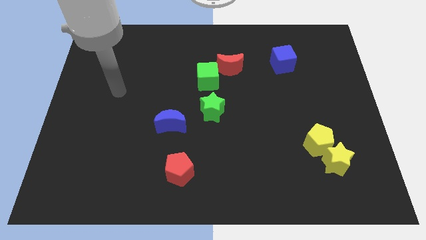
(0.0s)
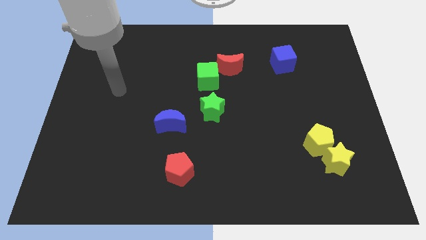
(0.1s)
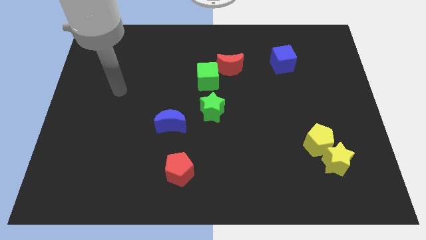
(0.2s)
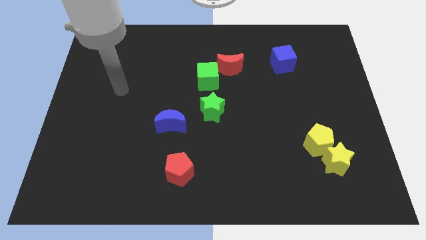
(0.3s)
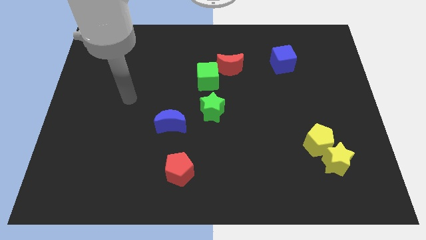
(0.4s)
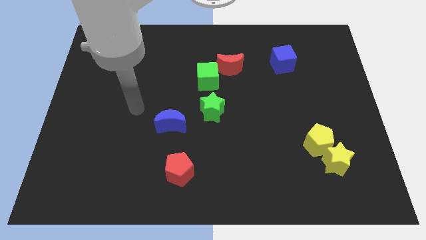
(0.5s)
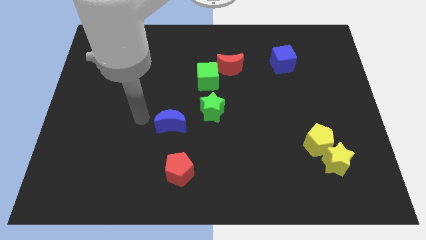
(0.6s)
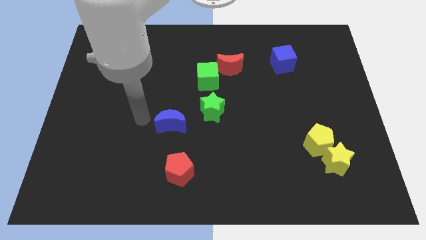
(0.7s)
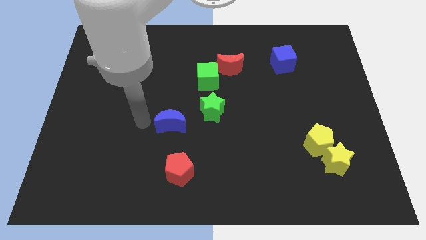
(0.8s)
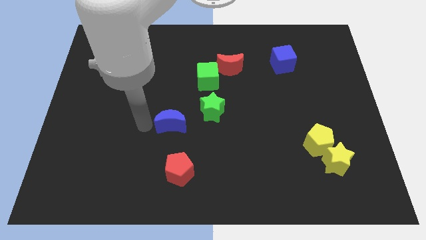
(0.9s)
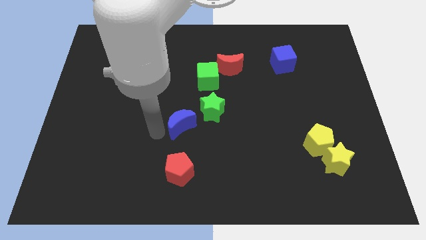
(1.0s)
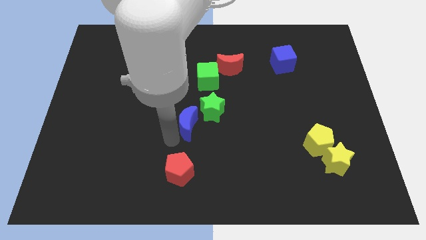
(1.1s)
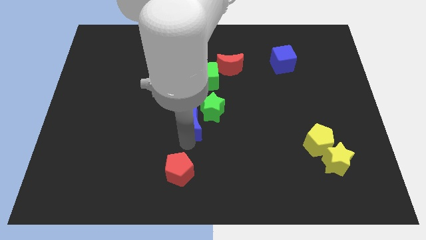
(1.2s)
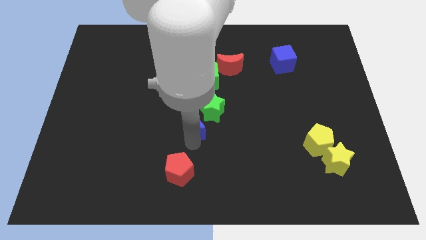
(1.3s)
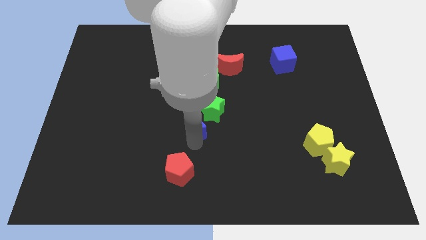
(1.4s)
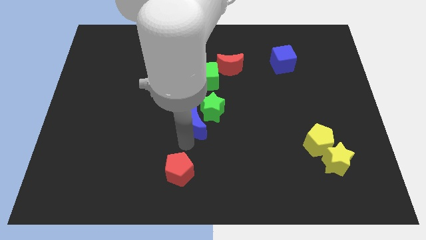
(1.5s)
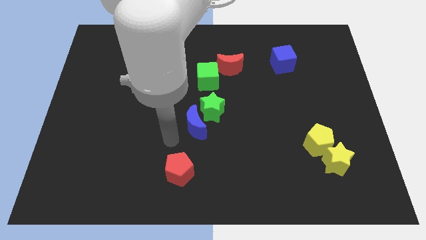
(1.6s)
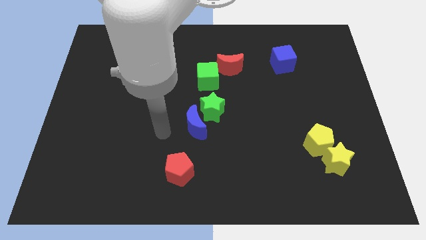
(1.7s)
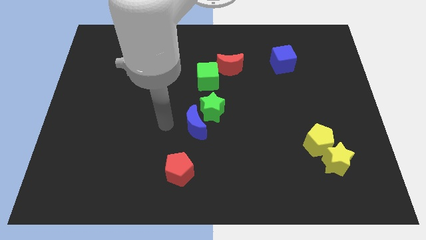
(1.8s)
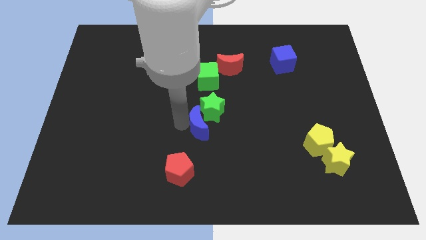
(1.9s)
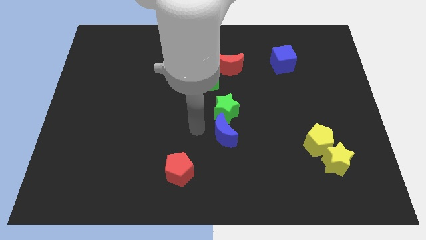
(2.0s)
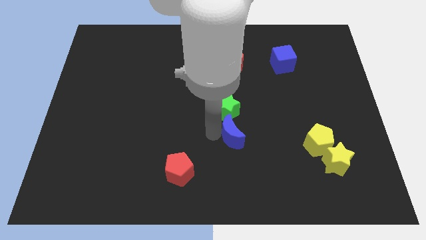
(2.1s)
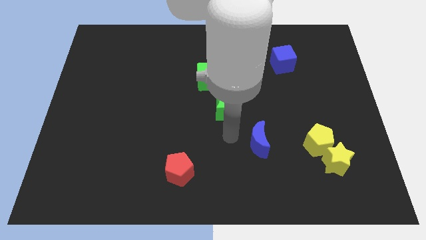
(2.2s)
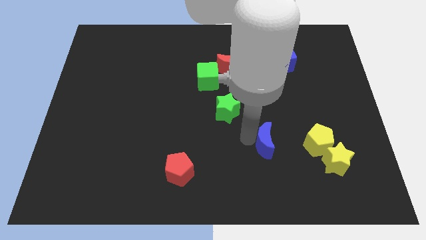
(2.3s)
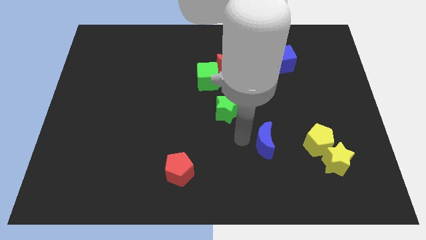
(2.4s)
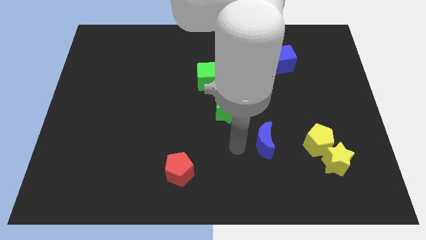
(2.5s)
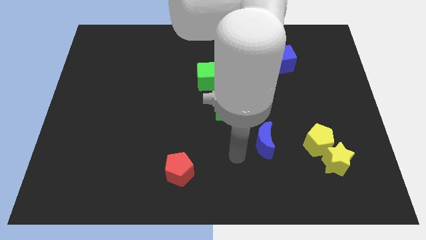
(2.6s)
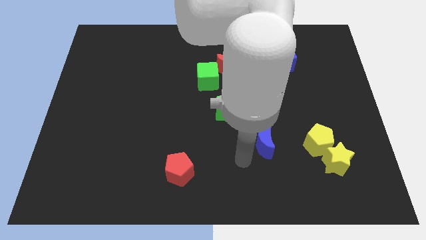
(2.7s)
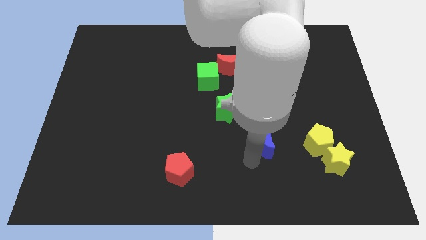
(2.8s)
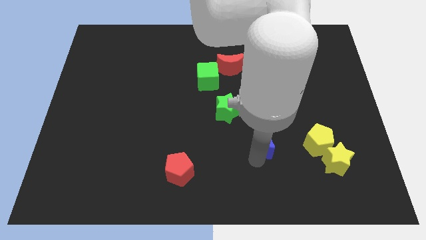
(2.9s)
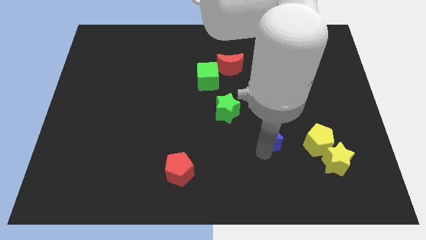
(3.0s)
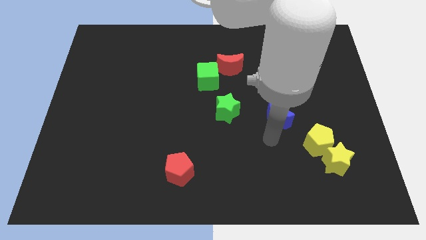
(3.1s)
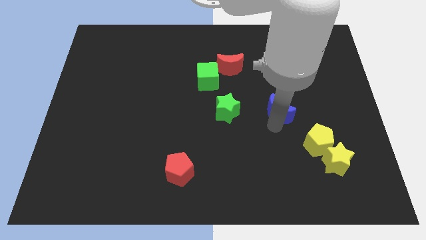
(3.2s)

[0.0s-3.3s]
place the blue crescent horizontally to the right side of the green star

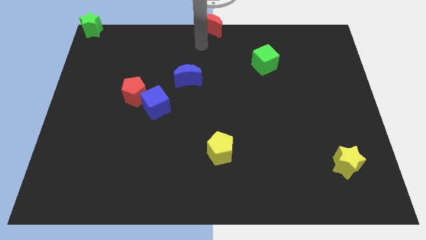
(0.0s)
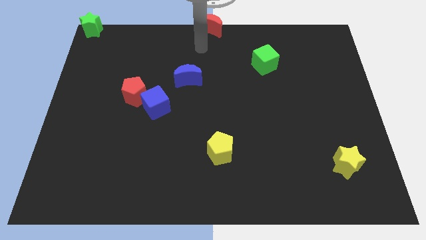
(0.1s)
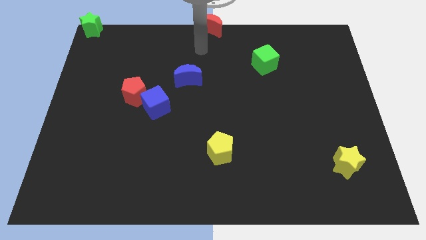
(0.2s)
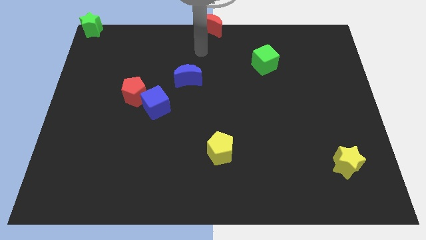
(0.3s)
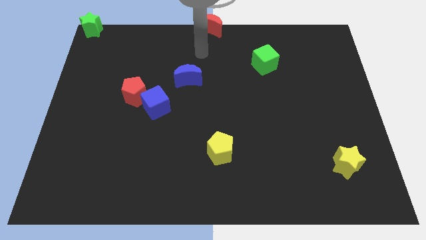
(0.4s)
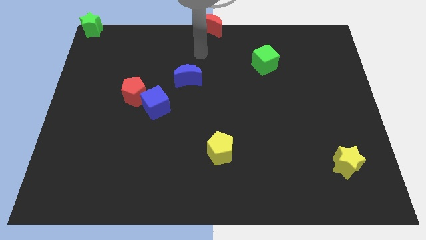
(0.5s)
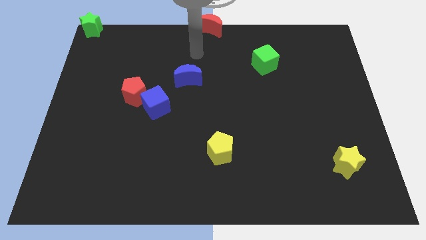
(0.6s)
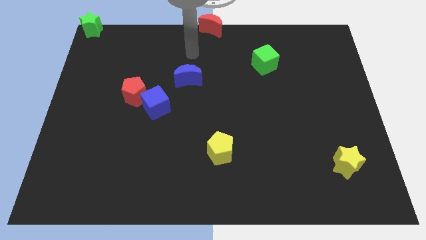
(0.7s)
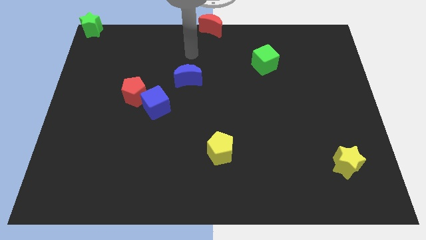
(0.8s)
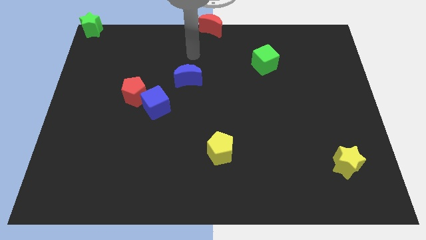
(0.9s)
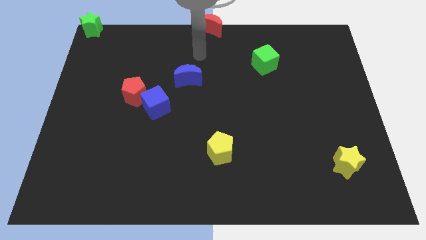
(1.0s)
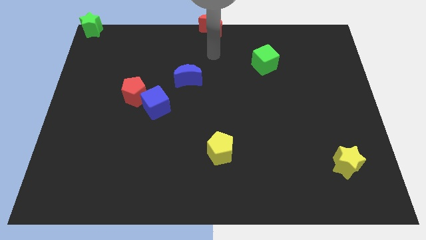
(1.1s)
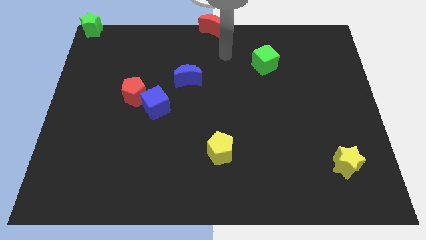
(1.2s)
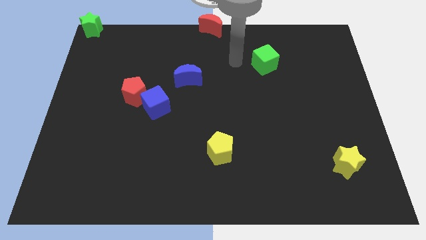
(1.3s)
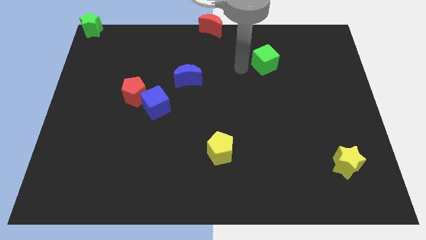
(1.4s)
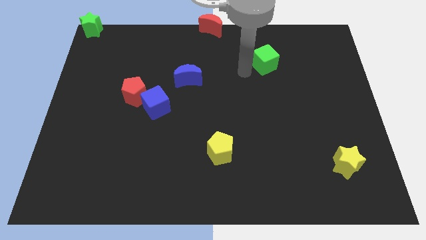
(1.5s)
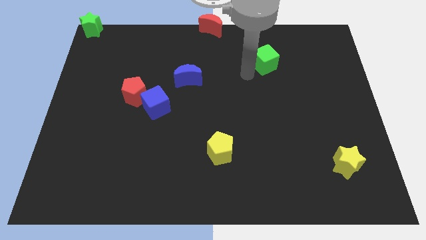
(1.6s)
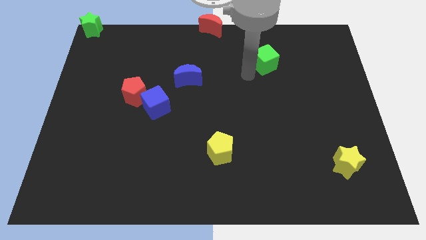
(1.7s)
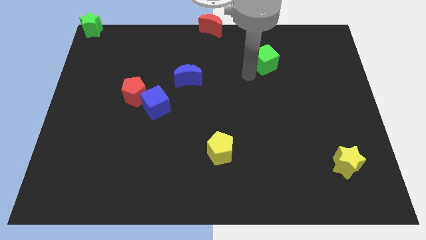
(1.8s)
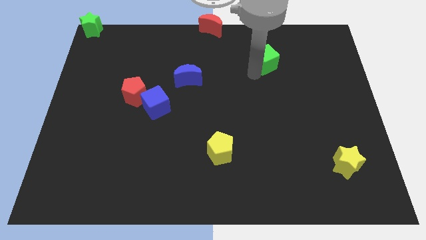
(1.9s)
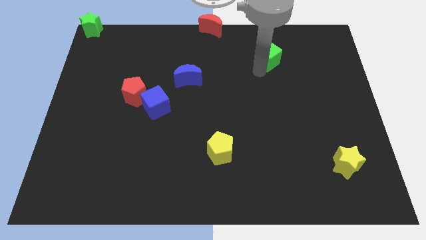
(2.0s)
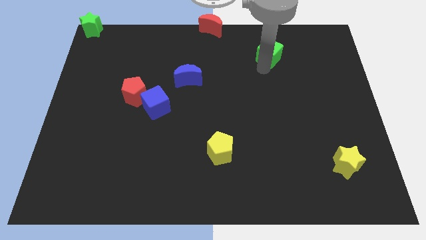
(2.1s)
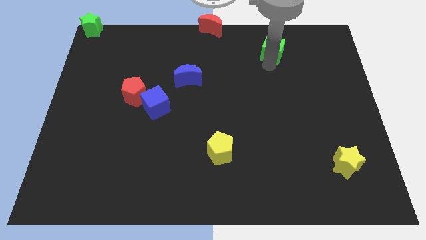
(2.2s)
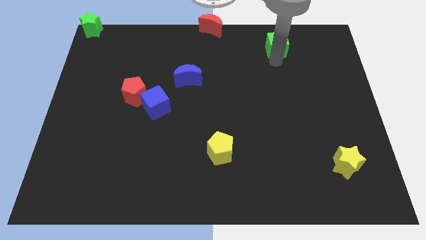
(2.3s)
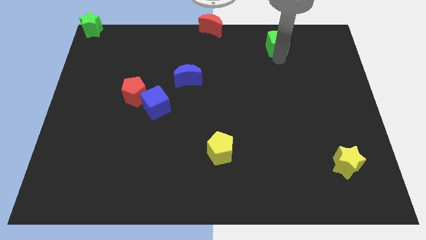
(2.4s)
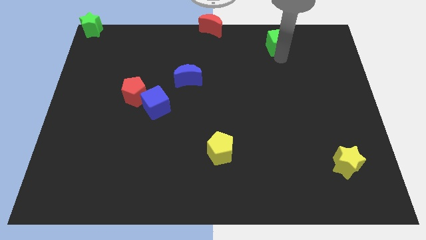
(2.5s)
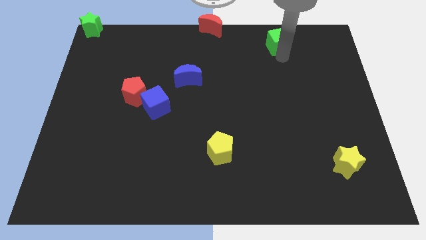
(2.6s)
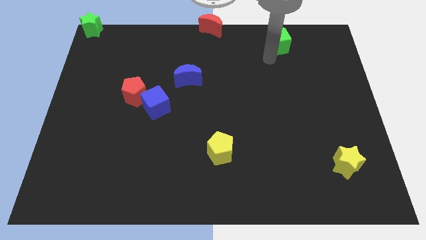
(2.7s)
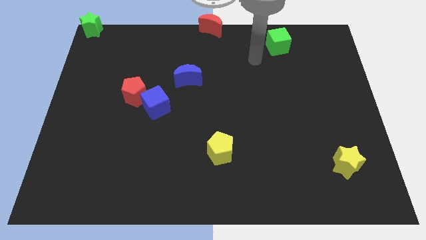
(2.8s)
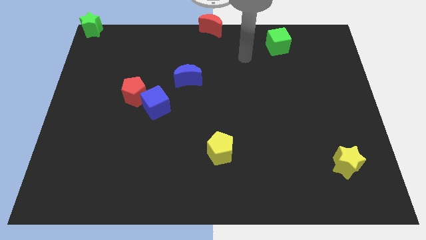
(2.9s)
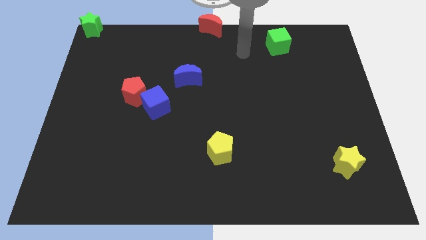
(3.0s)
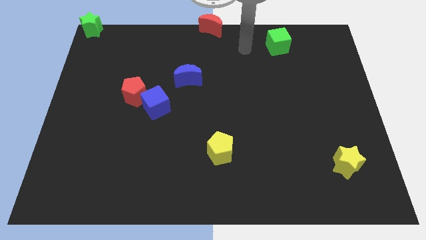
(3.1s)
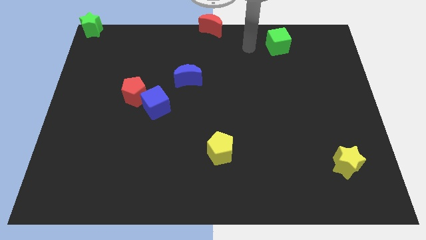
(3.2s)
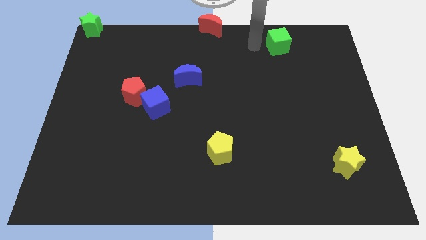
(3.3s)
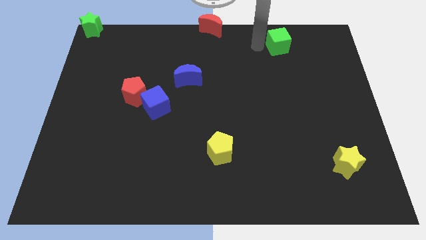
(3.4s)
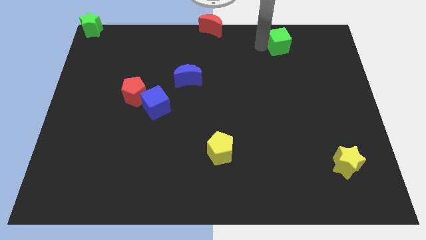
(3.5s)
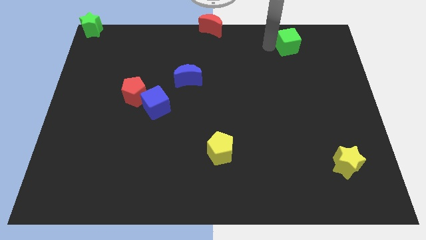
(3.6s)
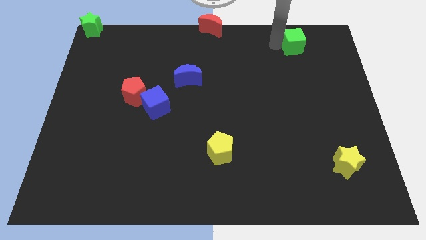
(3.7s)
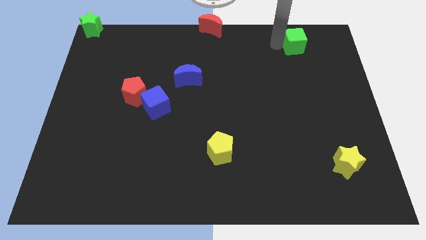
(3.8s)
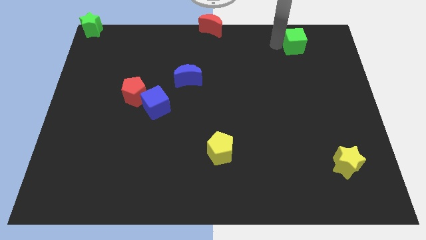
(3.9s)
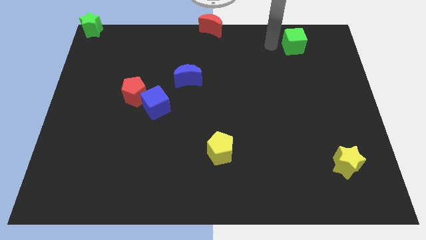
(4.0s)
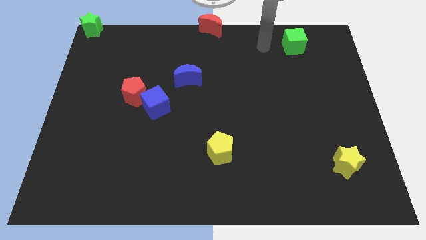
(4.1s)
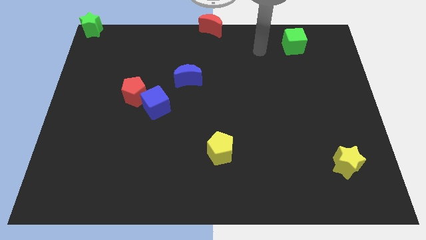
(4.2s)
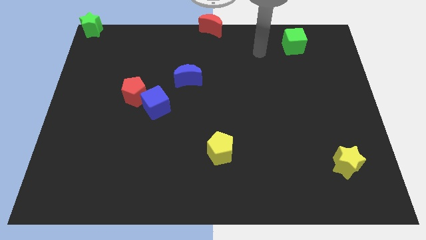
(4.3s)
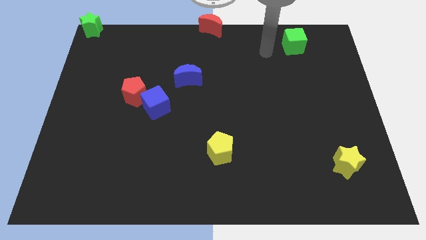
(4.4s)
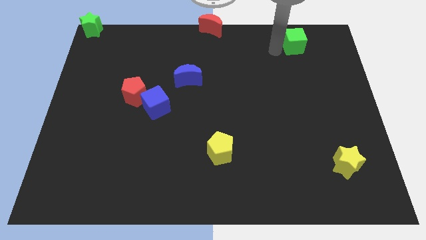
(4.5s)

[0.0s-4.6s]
push the green cube slightly to the right

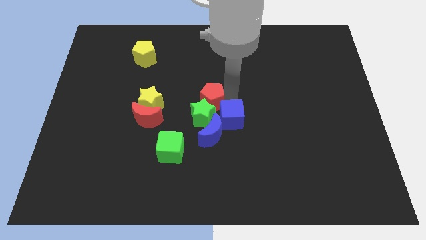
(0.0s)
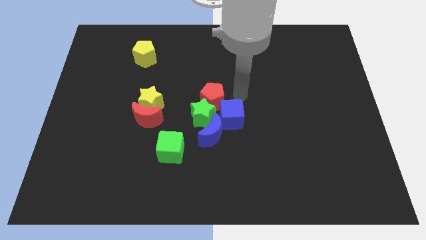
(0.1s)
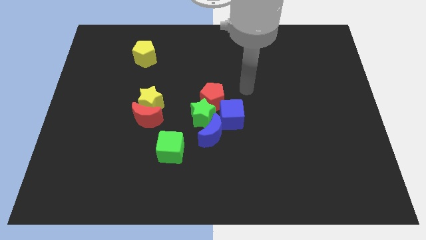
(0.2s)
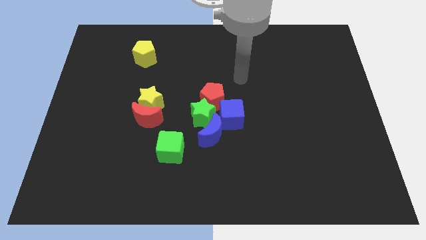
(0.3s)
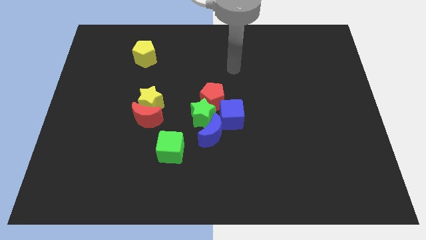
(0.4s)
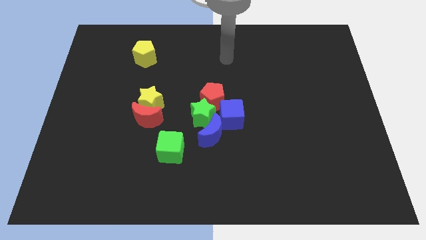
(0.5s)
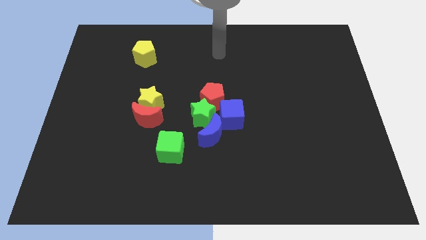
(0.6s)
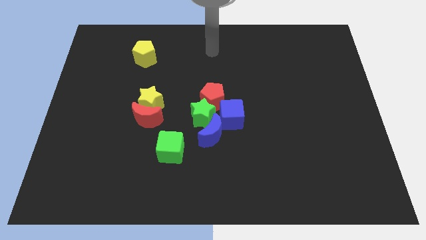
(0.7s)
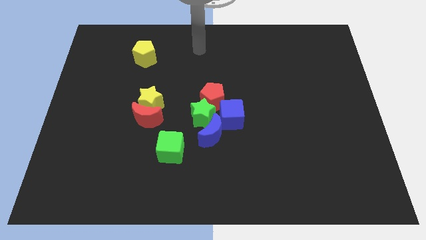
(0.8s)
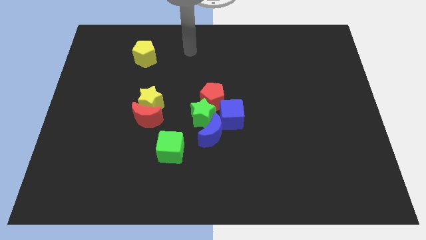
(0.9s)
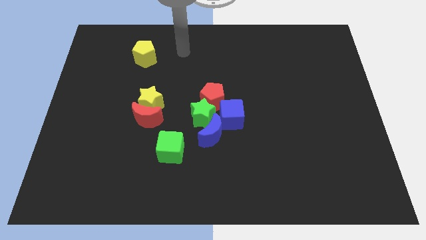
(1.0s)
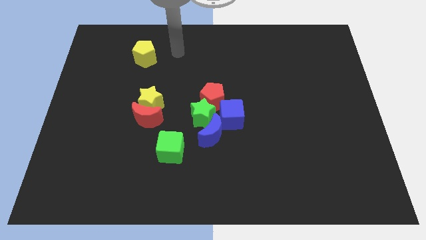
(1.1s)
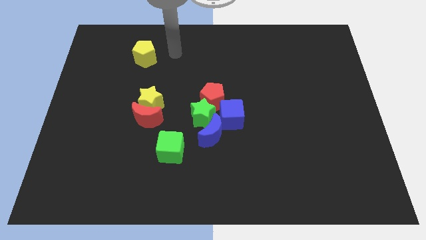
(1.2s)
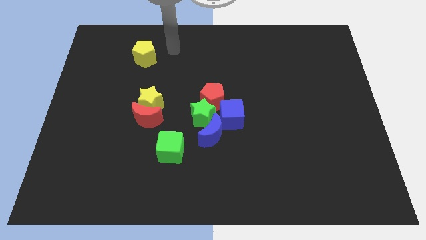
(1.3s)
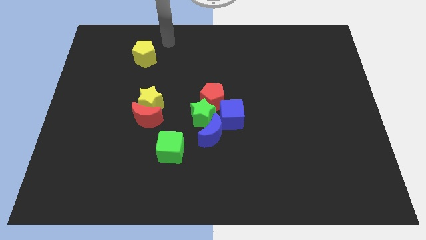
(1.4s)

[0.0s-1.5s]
move your arm away from the red pentagon
